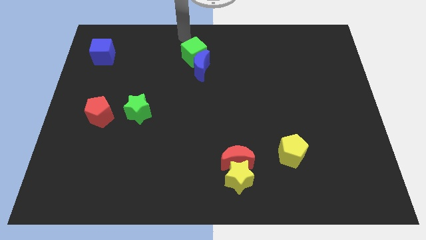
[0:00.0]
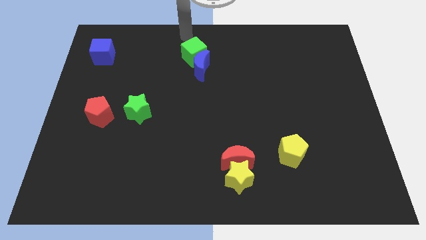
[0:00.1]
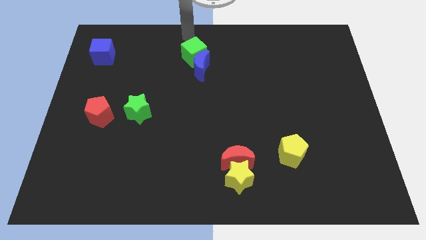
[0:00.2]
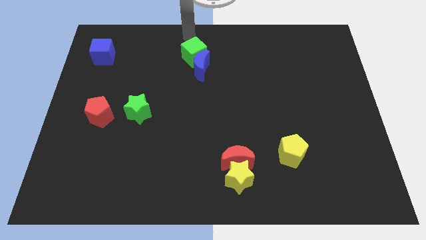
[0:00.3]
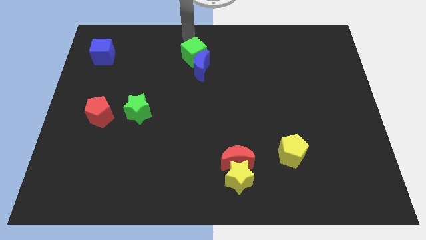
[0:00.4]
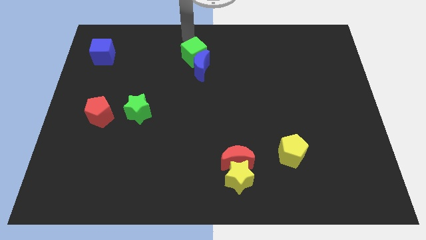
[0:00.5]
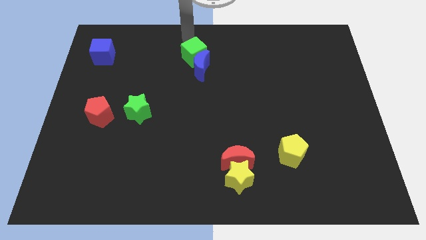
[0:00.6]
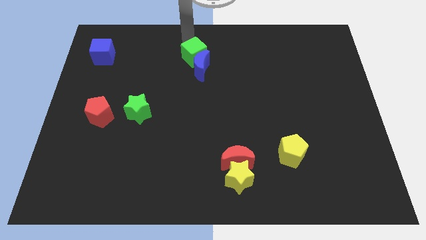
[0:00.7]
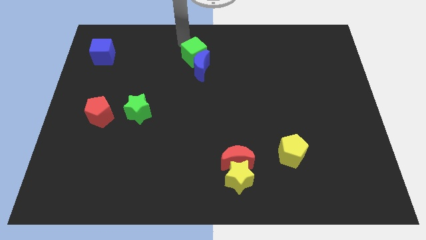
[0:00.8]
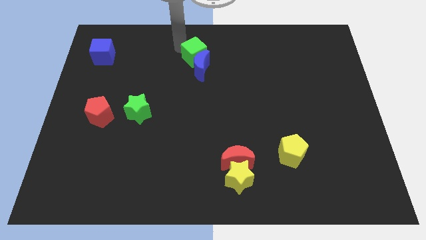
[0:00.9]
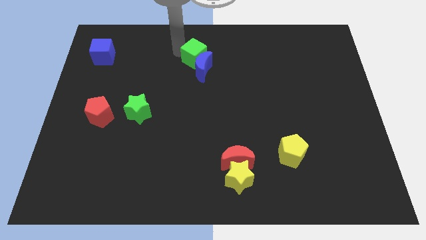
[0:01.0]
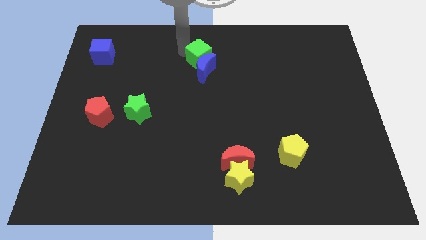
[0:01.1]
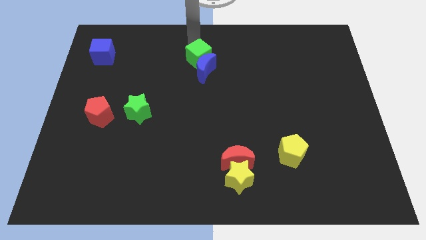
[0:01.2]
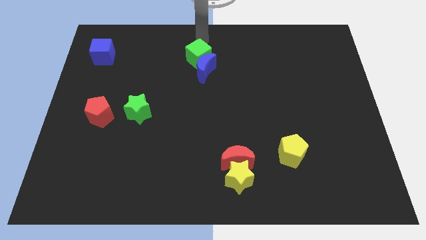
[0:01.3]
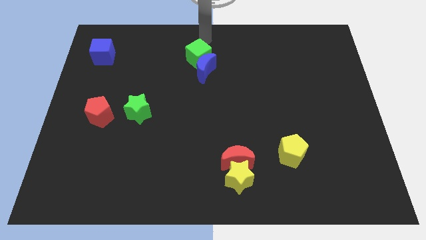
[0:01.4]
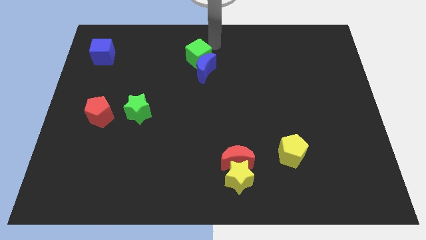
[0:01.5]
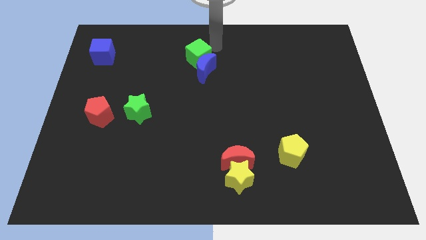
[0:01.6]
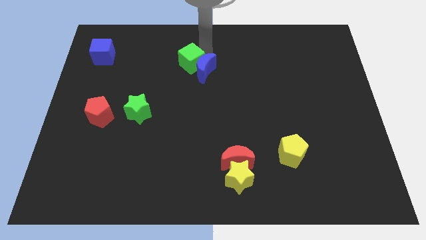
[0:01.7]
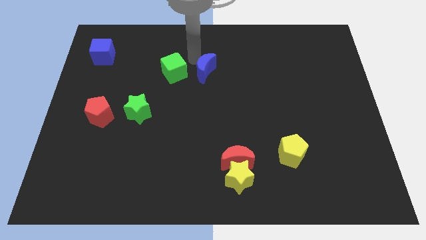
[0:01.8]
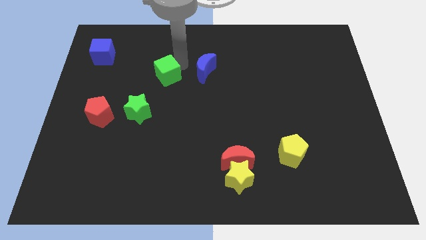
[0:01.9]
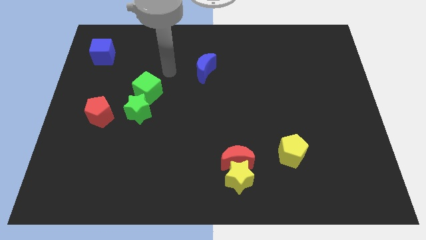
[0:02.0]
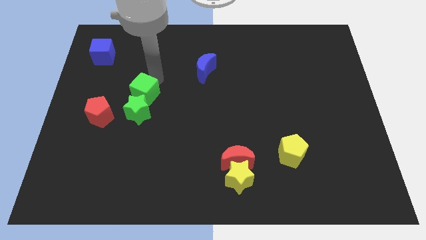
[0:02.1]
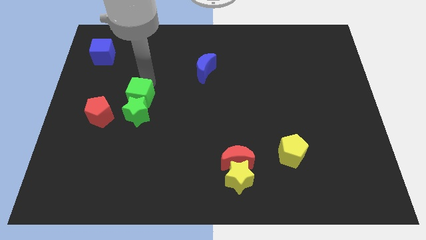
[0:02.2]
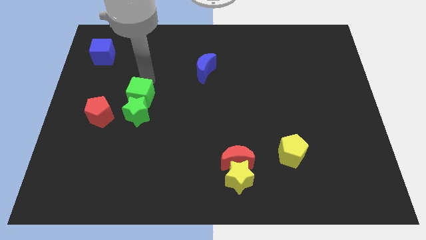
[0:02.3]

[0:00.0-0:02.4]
move the green cube to the to right of the green star

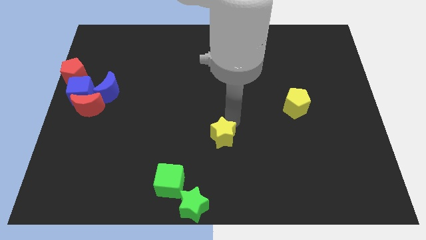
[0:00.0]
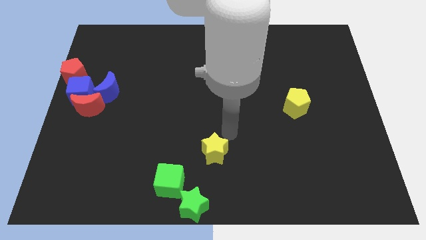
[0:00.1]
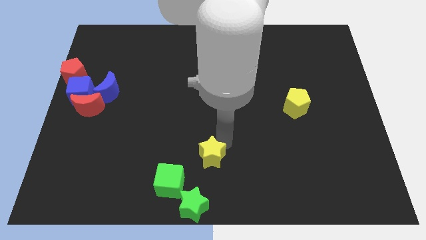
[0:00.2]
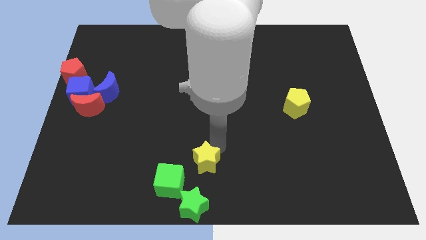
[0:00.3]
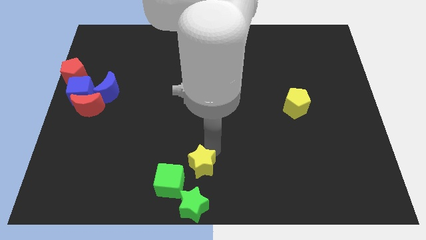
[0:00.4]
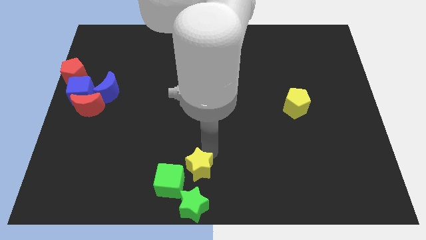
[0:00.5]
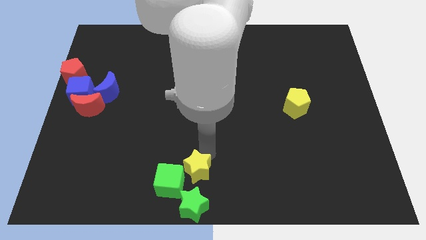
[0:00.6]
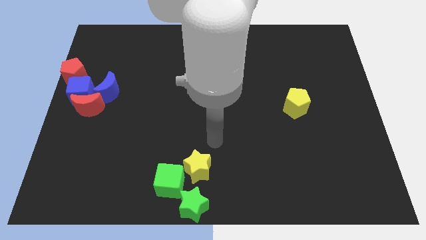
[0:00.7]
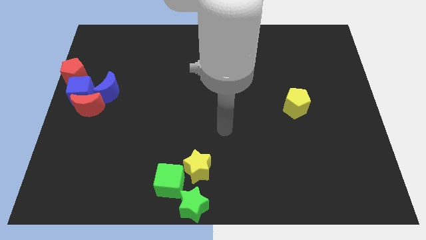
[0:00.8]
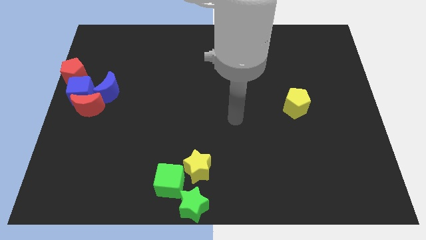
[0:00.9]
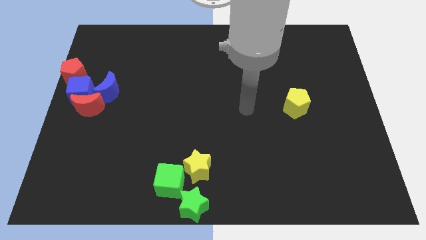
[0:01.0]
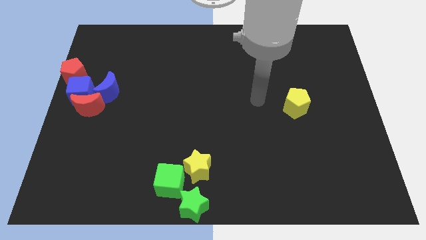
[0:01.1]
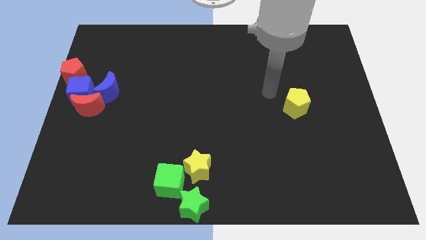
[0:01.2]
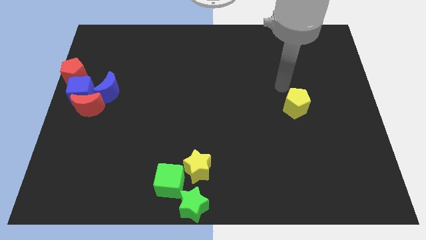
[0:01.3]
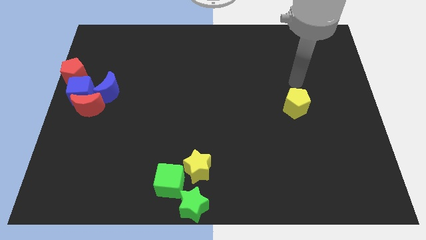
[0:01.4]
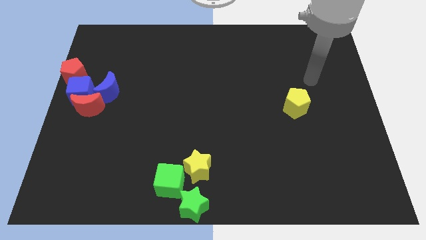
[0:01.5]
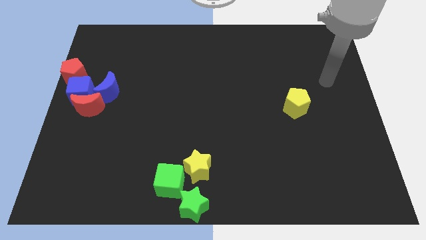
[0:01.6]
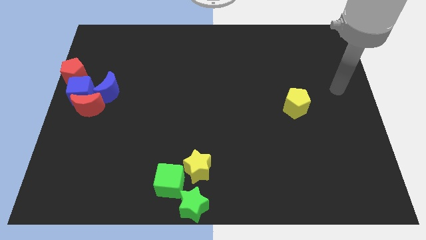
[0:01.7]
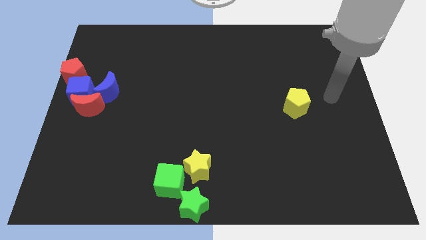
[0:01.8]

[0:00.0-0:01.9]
place the yellow star towards the top right of the green cube

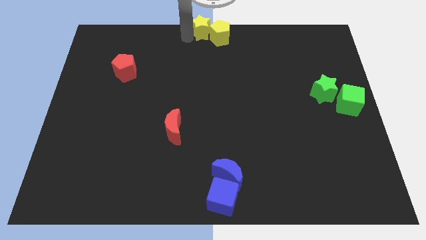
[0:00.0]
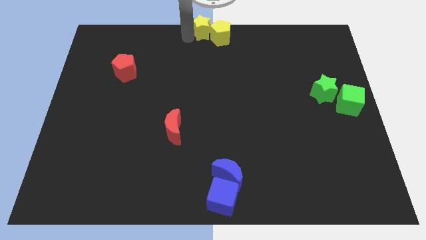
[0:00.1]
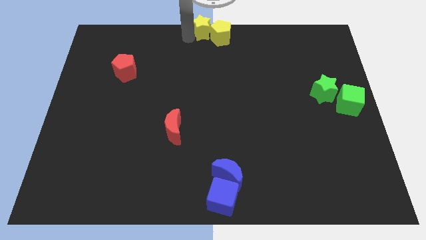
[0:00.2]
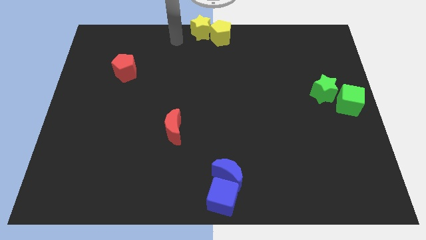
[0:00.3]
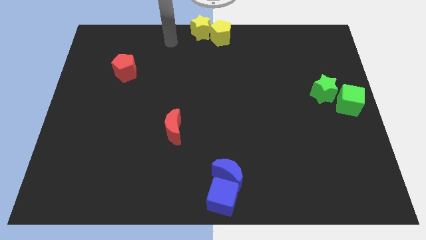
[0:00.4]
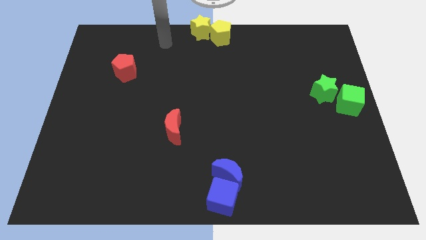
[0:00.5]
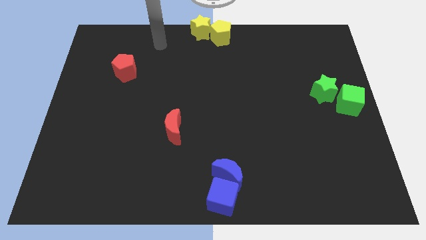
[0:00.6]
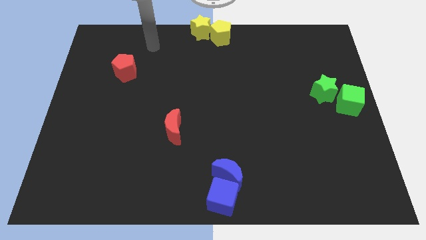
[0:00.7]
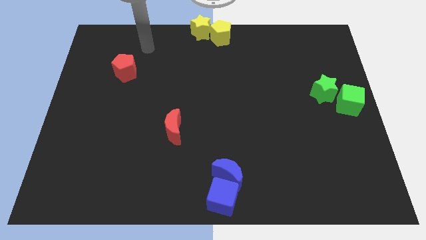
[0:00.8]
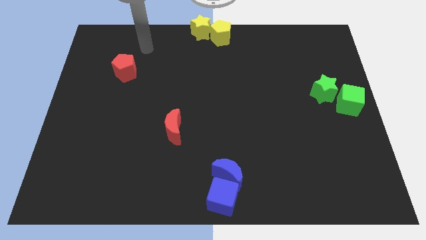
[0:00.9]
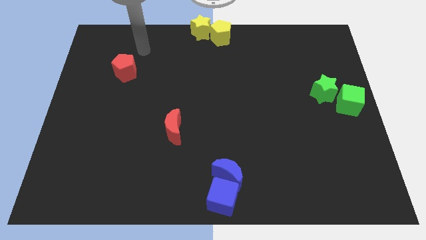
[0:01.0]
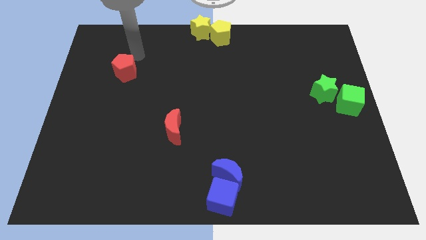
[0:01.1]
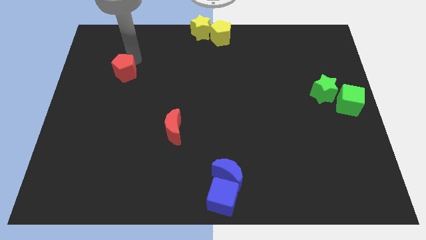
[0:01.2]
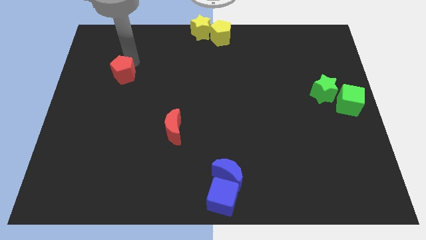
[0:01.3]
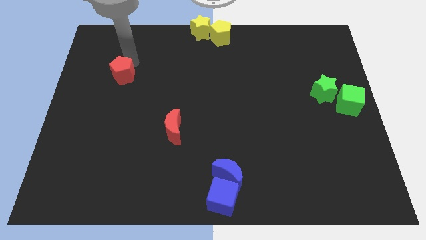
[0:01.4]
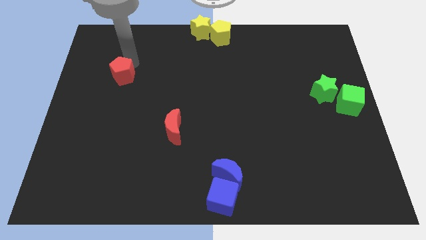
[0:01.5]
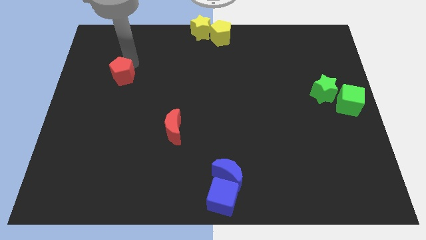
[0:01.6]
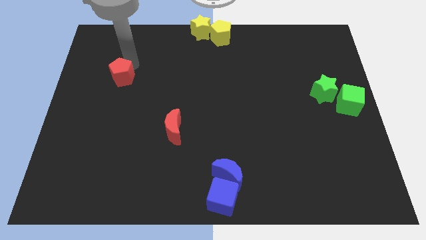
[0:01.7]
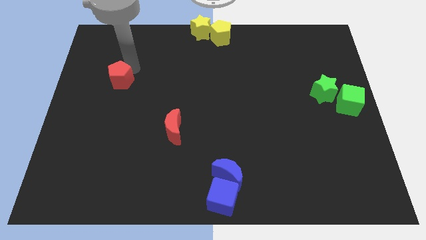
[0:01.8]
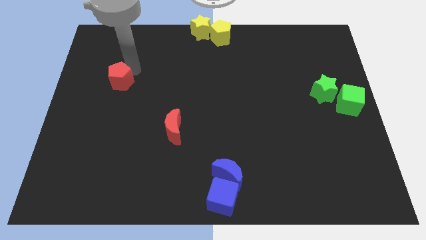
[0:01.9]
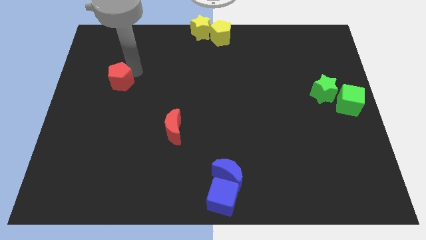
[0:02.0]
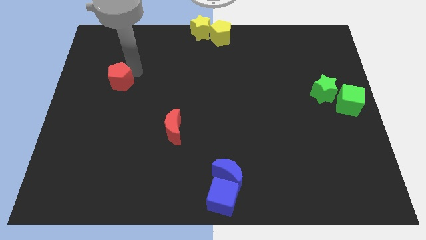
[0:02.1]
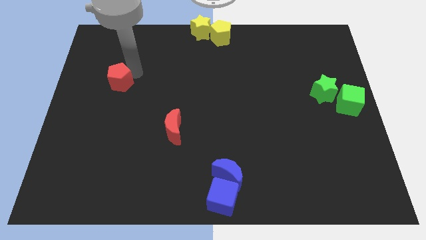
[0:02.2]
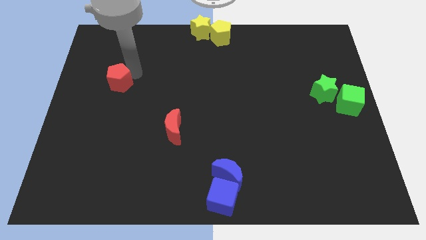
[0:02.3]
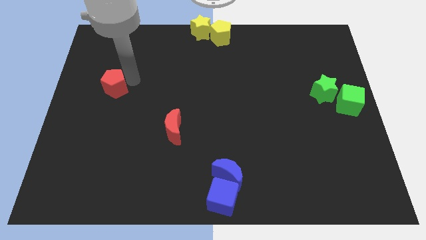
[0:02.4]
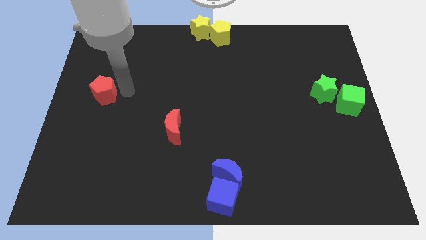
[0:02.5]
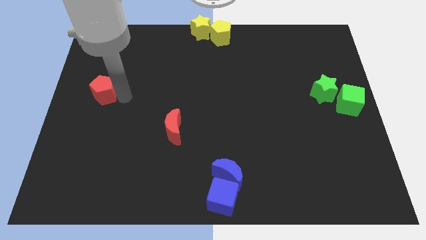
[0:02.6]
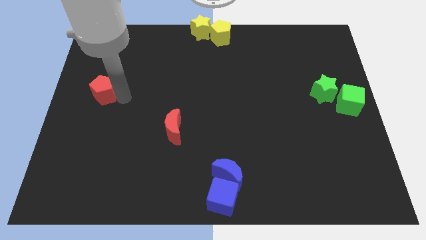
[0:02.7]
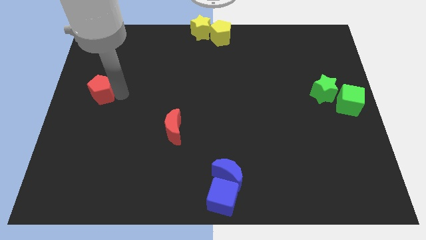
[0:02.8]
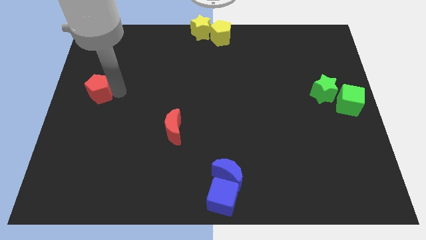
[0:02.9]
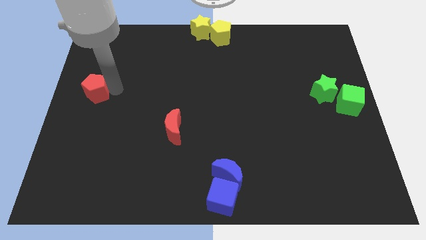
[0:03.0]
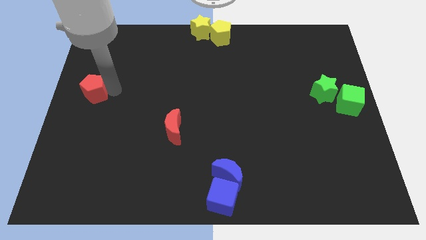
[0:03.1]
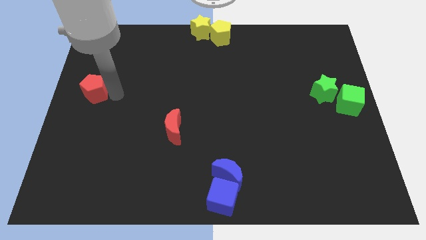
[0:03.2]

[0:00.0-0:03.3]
slide the red pentagon towards the center left of the board

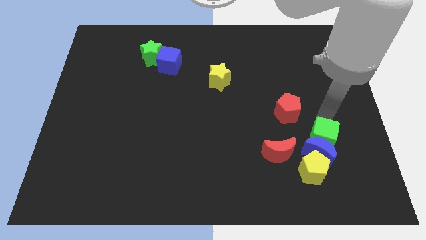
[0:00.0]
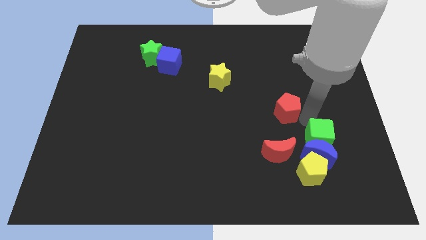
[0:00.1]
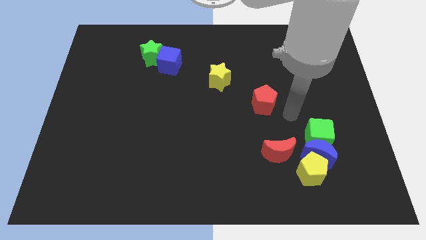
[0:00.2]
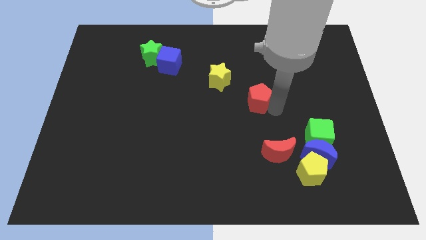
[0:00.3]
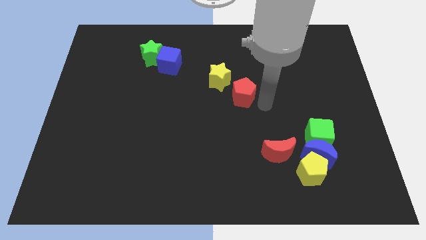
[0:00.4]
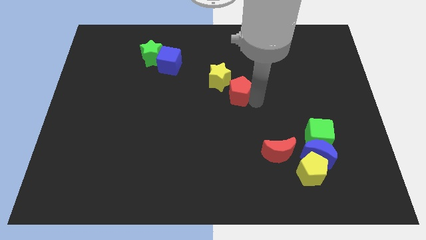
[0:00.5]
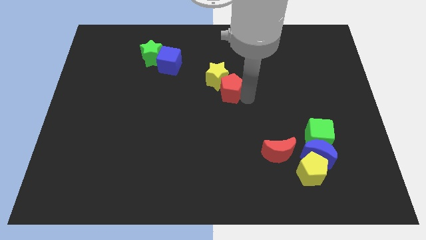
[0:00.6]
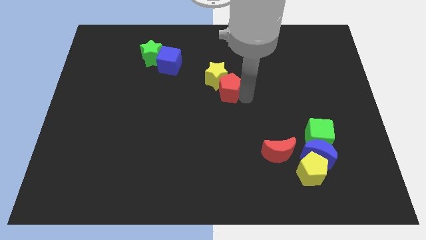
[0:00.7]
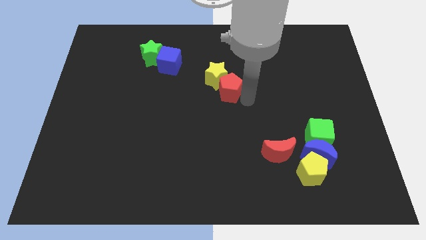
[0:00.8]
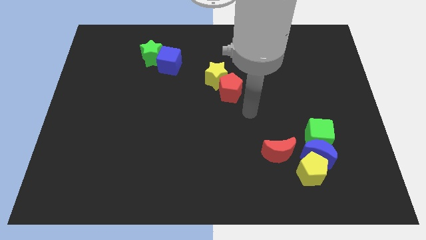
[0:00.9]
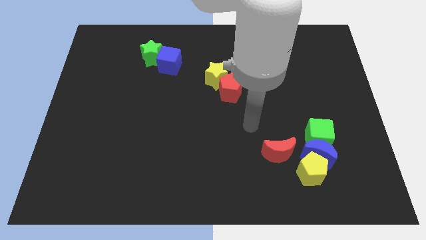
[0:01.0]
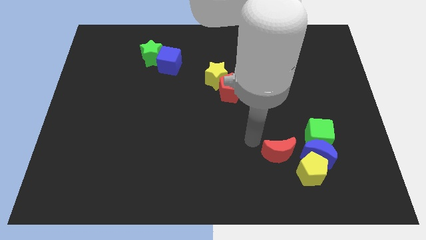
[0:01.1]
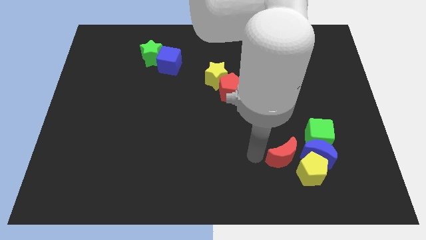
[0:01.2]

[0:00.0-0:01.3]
push the red pentagon close to the yellow star
